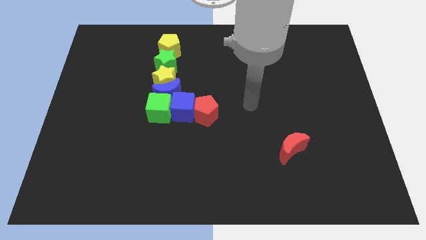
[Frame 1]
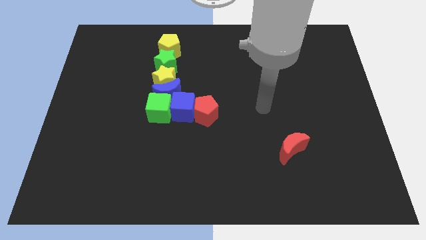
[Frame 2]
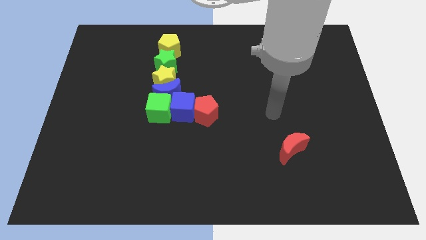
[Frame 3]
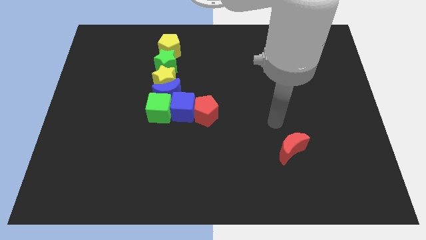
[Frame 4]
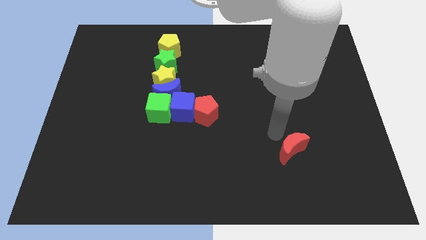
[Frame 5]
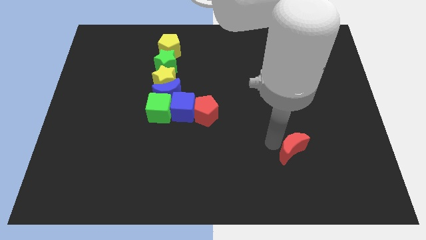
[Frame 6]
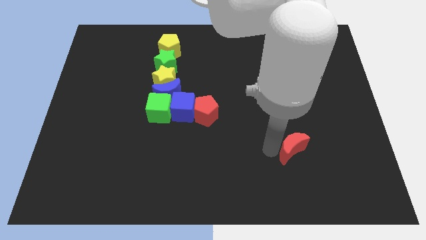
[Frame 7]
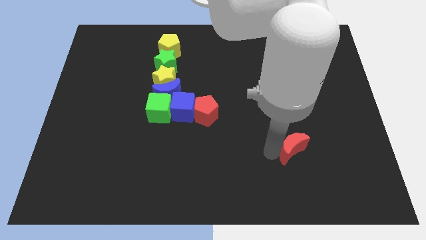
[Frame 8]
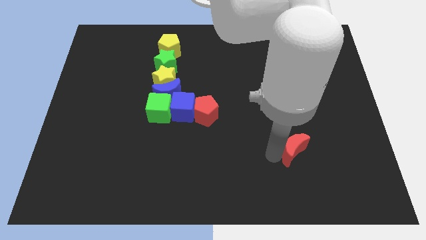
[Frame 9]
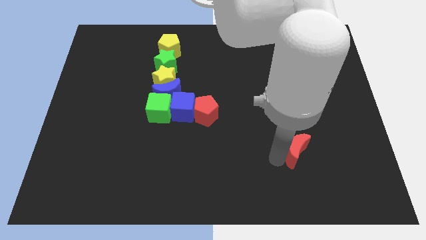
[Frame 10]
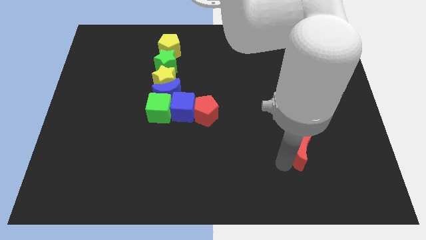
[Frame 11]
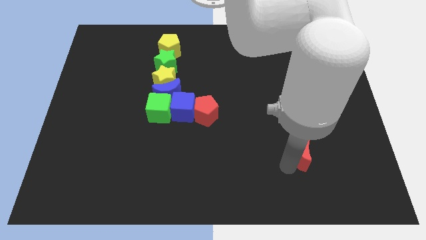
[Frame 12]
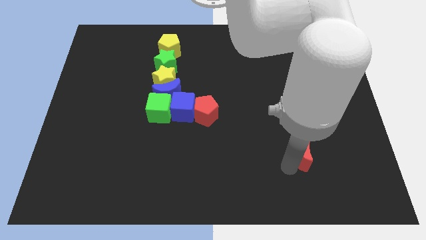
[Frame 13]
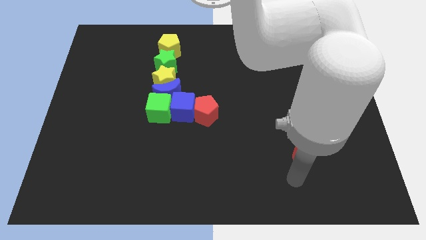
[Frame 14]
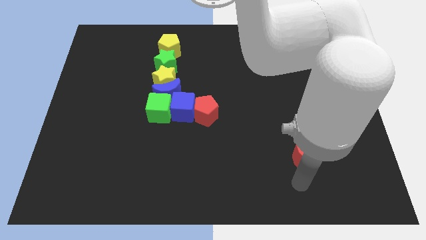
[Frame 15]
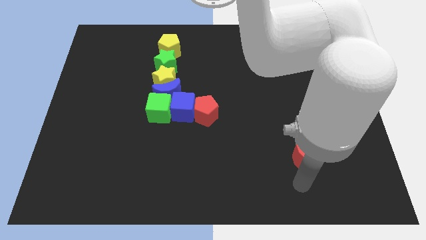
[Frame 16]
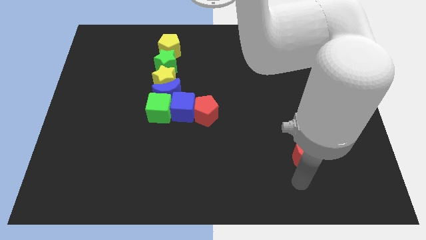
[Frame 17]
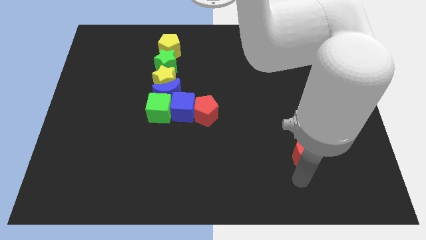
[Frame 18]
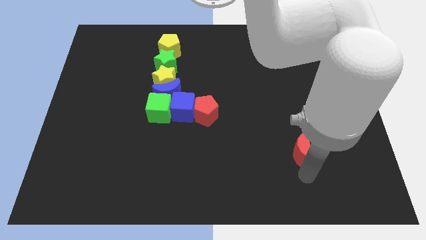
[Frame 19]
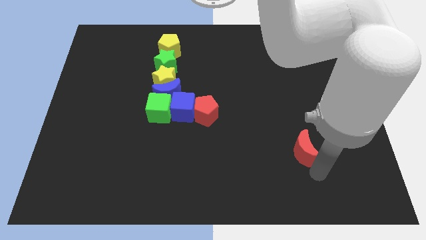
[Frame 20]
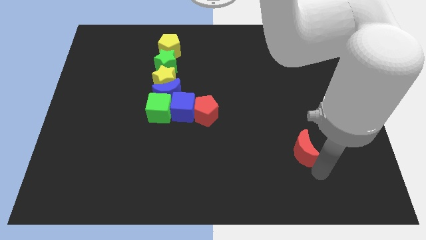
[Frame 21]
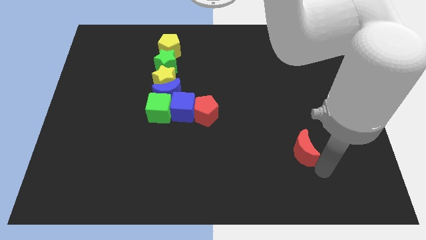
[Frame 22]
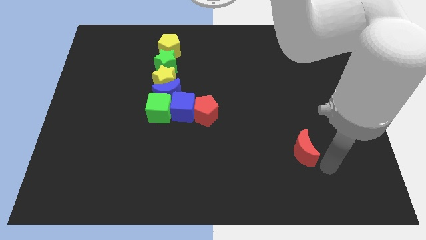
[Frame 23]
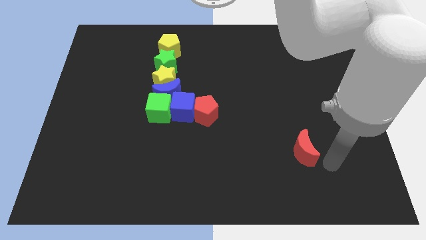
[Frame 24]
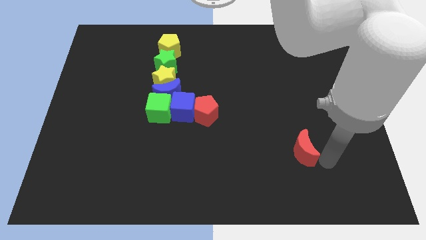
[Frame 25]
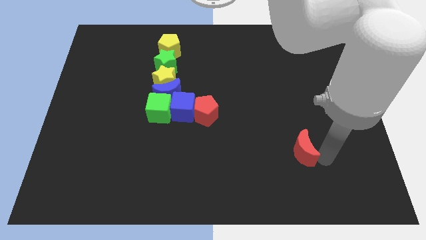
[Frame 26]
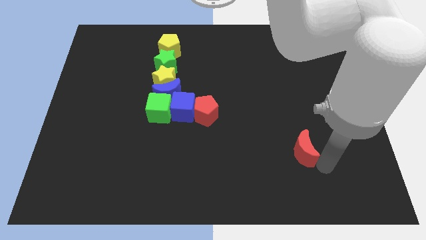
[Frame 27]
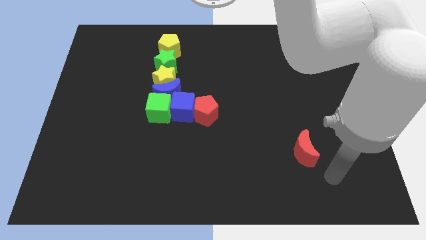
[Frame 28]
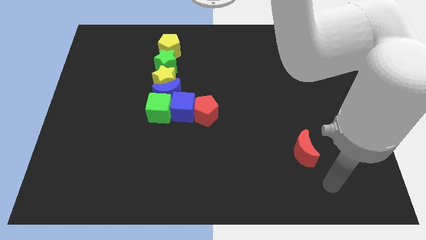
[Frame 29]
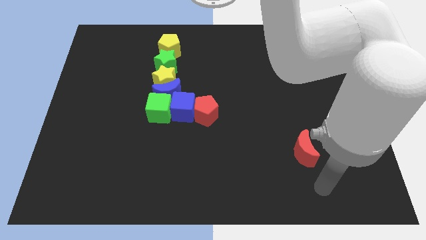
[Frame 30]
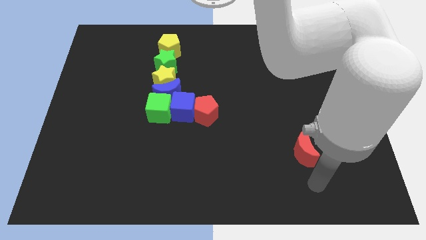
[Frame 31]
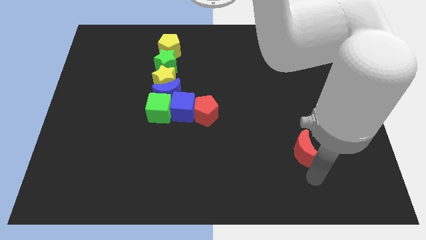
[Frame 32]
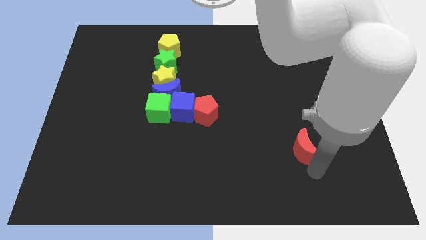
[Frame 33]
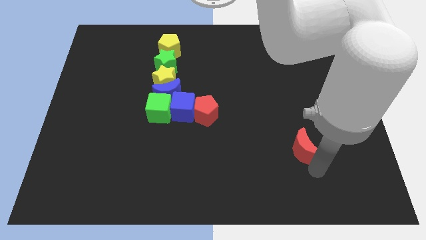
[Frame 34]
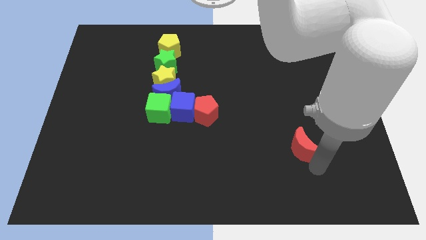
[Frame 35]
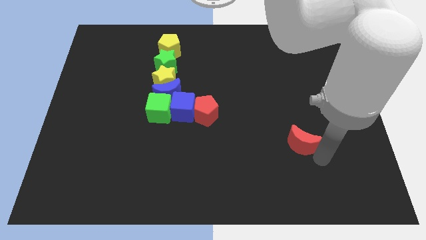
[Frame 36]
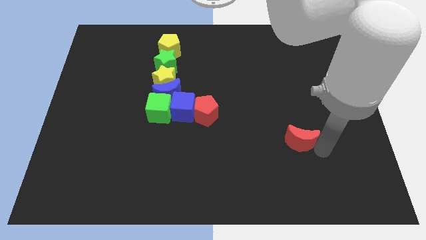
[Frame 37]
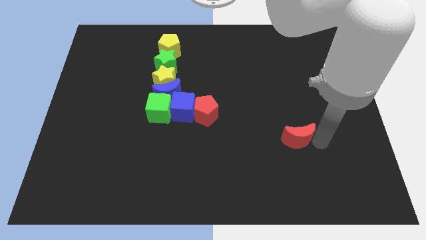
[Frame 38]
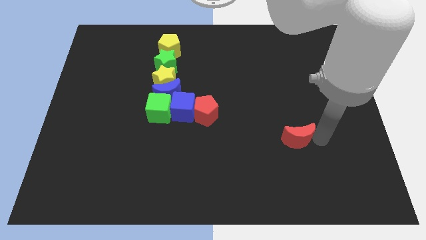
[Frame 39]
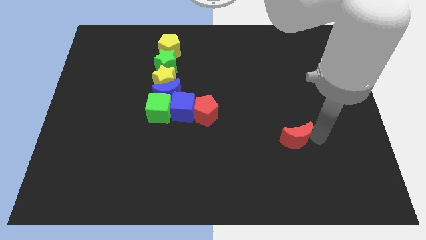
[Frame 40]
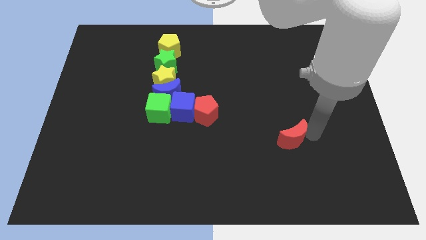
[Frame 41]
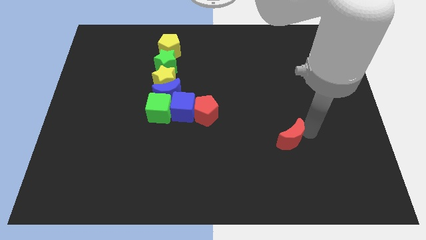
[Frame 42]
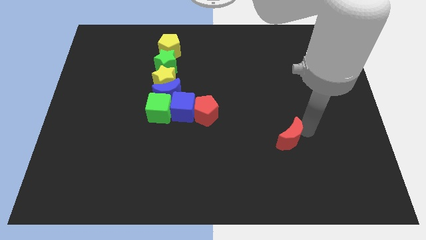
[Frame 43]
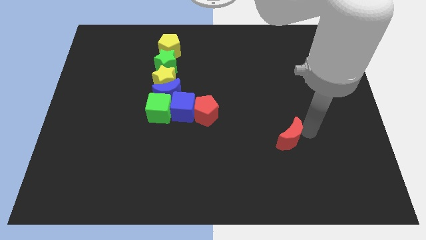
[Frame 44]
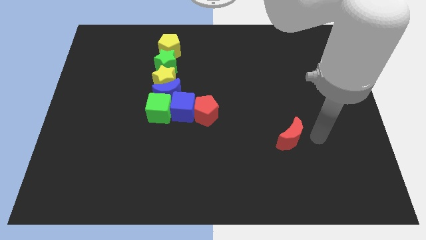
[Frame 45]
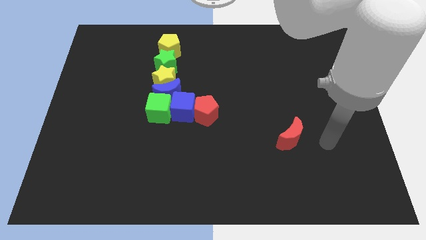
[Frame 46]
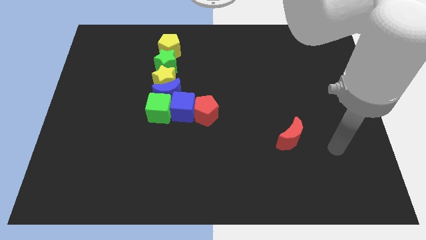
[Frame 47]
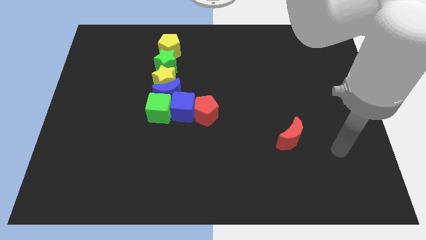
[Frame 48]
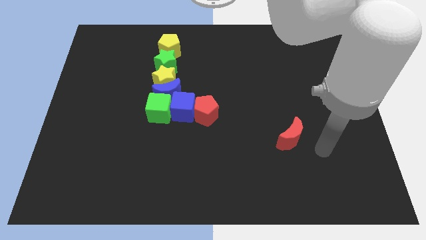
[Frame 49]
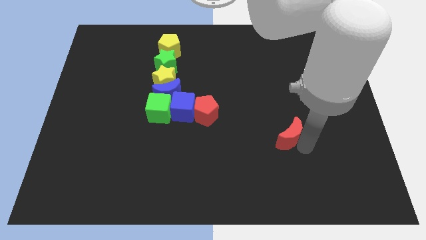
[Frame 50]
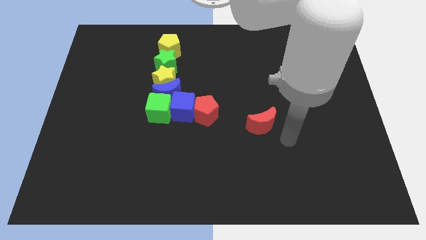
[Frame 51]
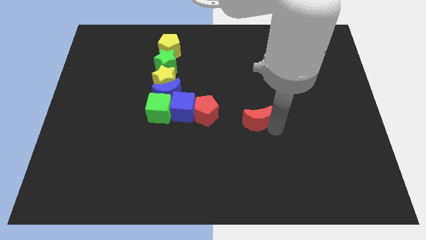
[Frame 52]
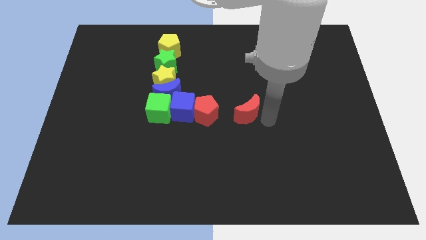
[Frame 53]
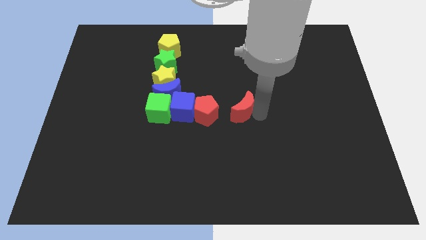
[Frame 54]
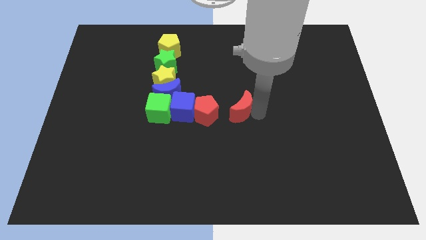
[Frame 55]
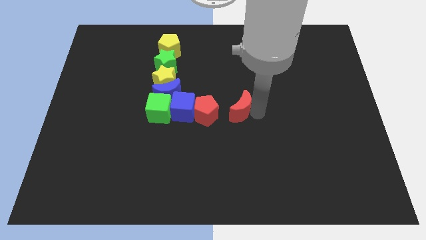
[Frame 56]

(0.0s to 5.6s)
push the red moon diagonal to the right of red pentagon

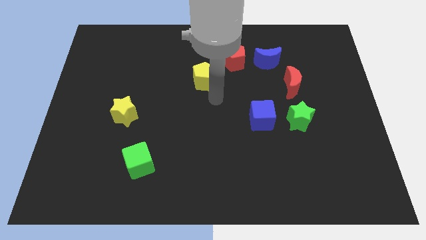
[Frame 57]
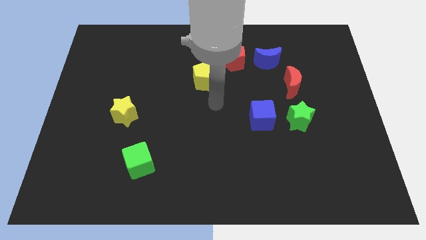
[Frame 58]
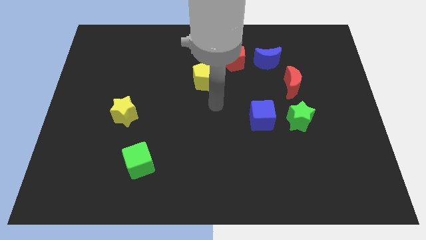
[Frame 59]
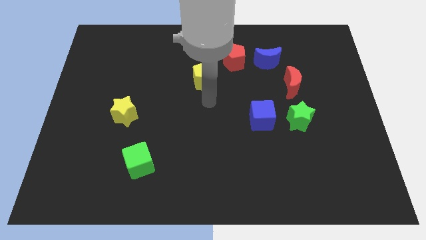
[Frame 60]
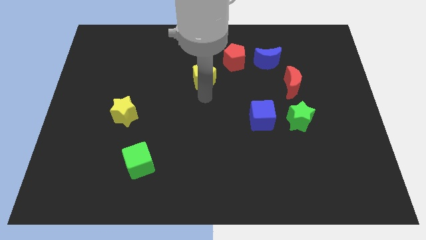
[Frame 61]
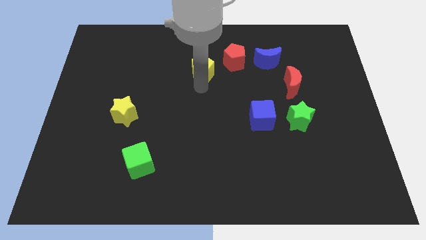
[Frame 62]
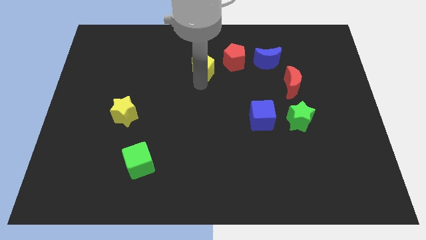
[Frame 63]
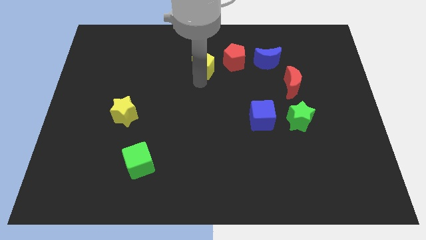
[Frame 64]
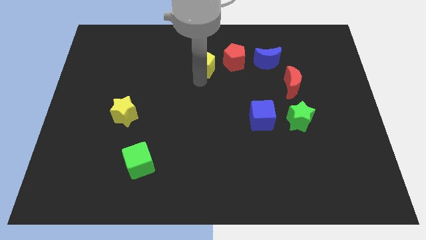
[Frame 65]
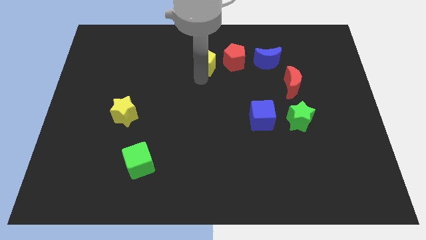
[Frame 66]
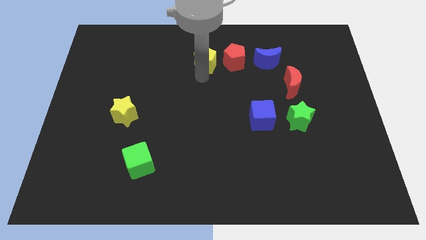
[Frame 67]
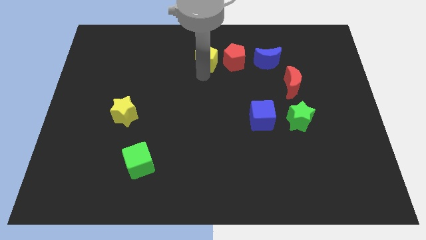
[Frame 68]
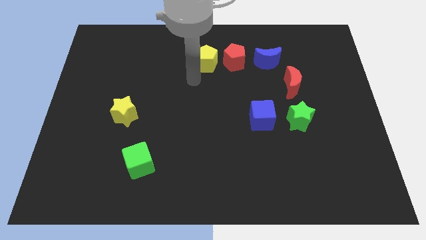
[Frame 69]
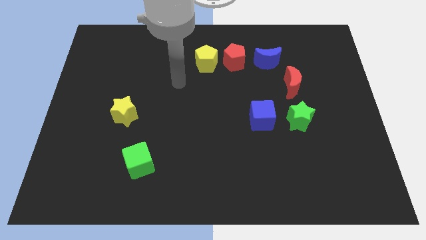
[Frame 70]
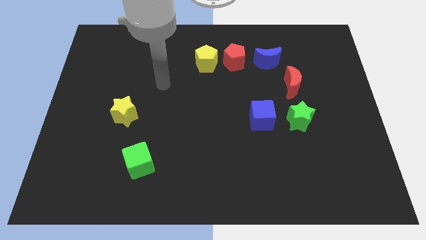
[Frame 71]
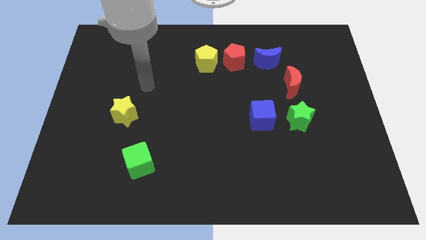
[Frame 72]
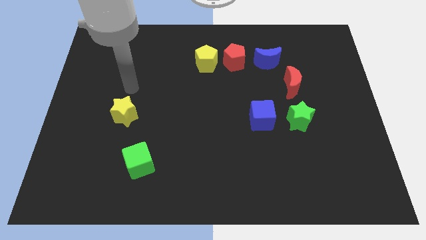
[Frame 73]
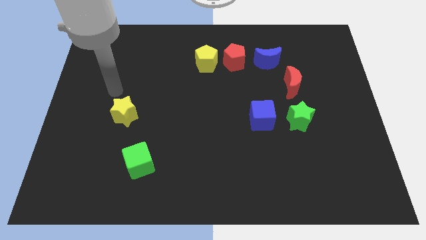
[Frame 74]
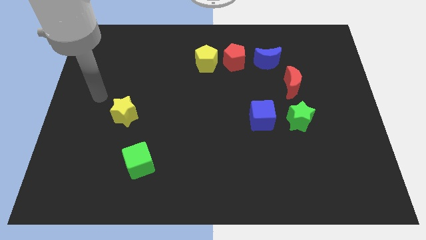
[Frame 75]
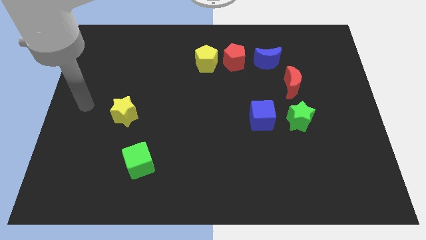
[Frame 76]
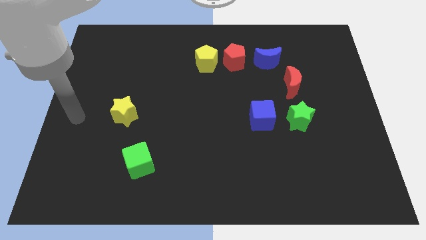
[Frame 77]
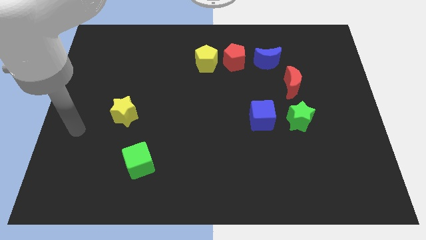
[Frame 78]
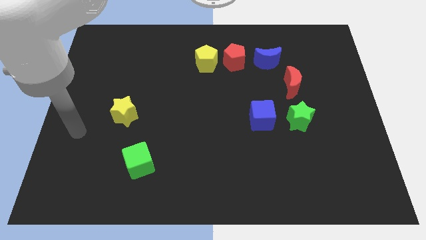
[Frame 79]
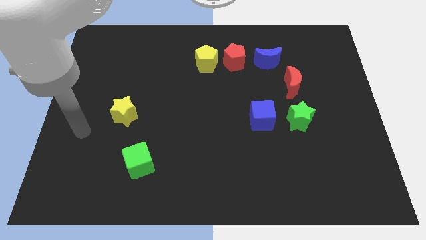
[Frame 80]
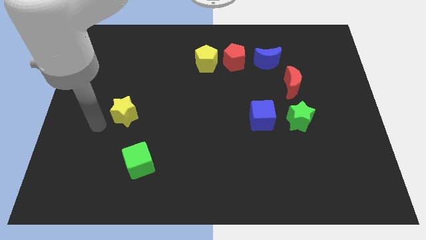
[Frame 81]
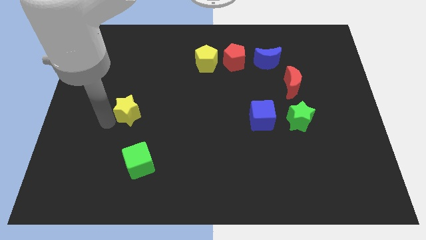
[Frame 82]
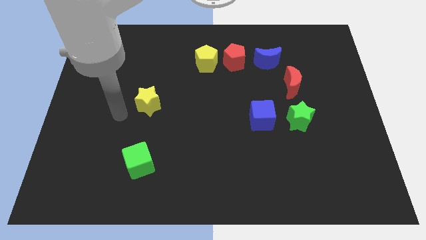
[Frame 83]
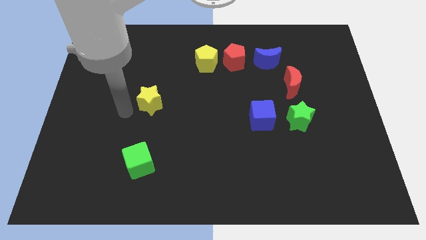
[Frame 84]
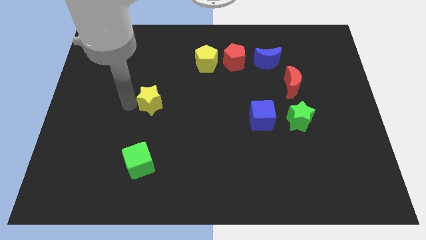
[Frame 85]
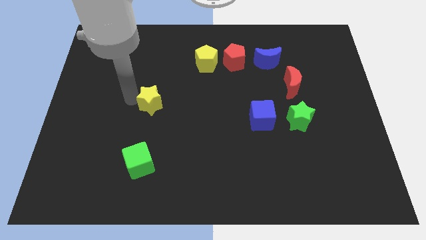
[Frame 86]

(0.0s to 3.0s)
place the yellow pentagon left to the red pentagon

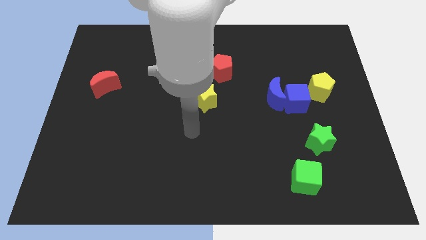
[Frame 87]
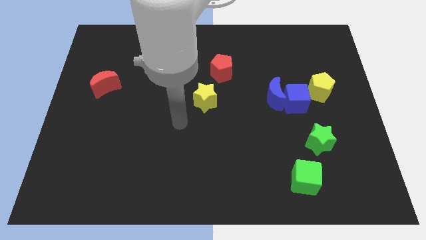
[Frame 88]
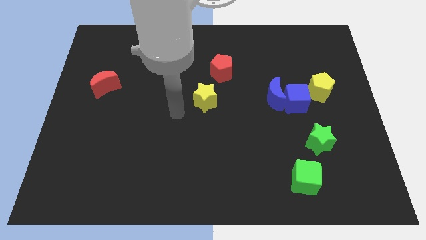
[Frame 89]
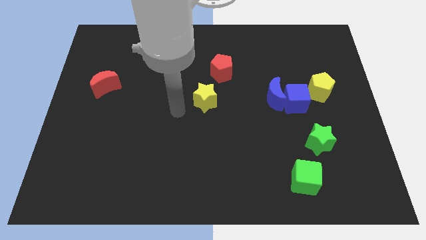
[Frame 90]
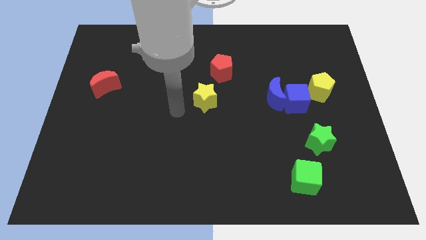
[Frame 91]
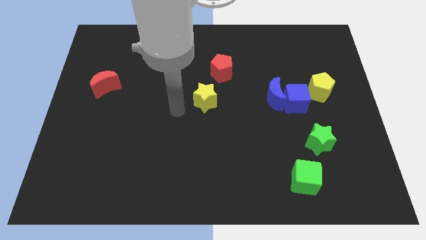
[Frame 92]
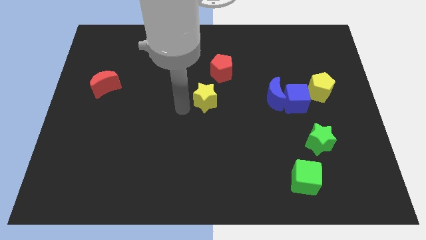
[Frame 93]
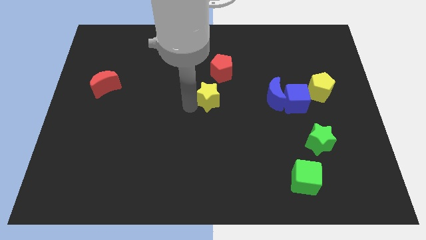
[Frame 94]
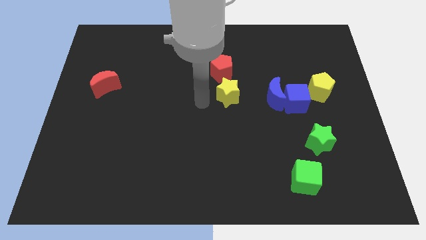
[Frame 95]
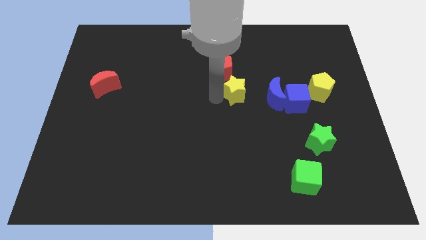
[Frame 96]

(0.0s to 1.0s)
move the yellow star down to the red pentagon
